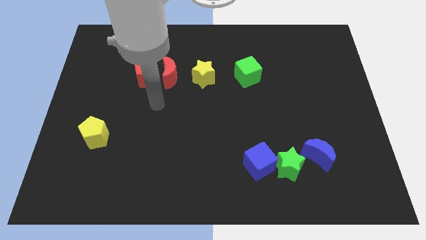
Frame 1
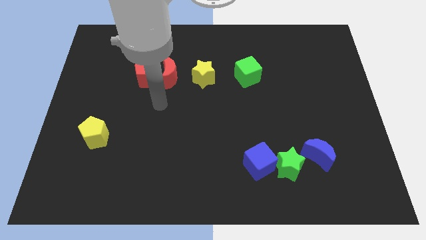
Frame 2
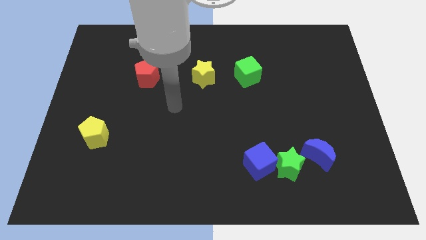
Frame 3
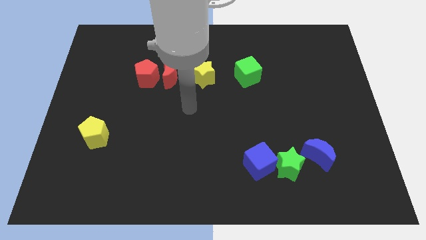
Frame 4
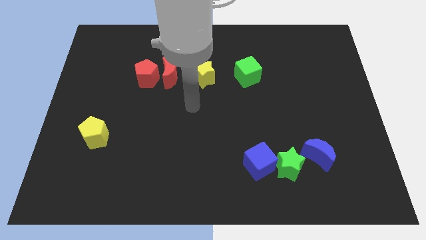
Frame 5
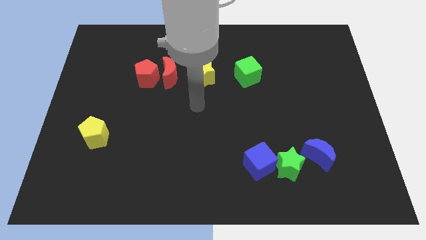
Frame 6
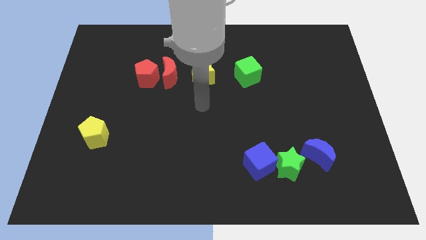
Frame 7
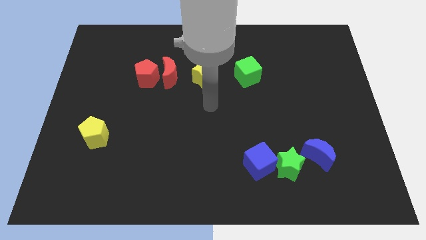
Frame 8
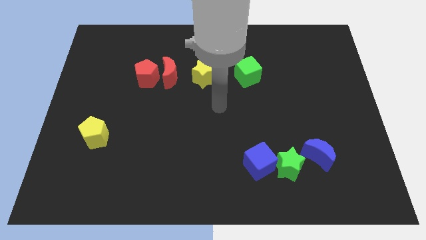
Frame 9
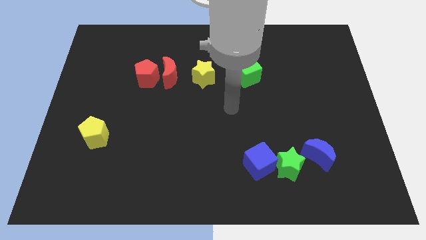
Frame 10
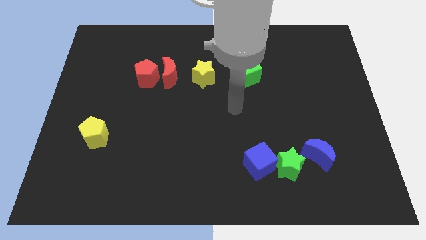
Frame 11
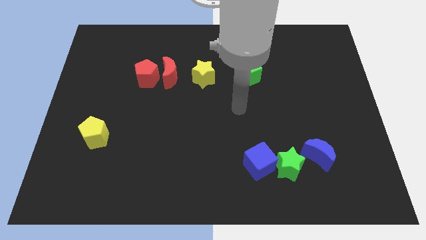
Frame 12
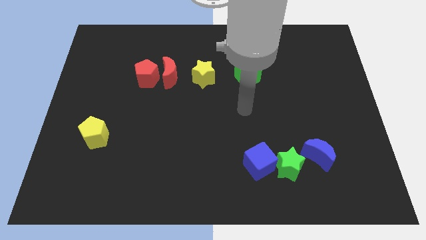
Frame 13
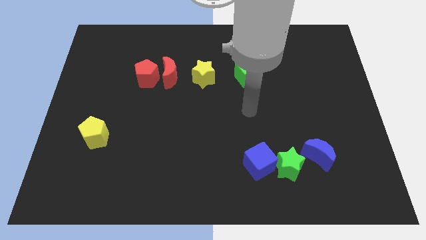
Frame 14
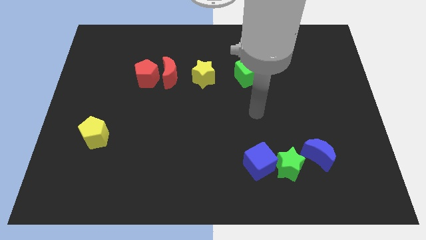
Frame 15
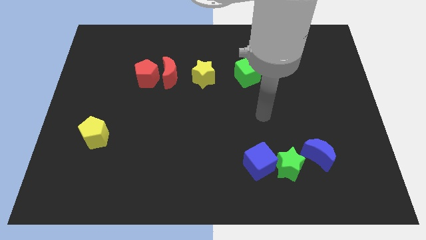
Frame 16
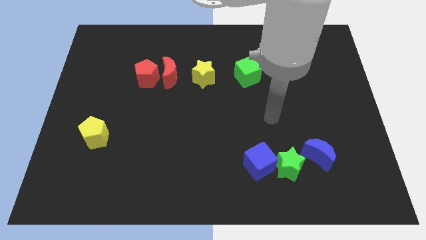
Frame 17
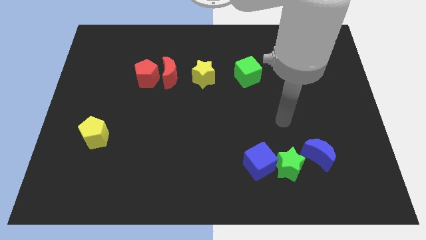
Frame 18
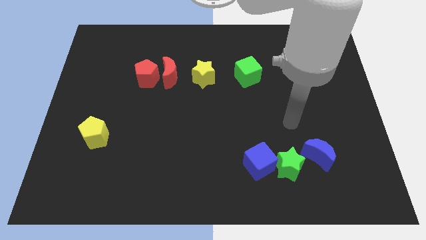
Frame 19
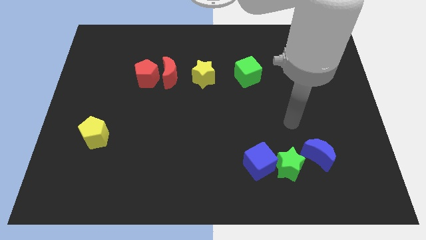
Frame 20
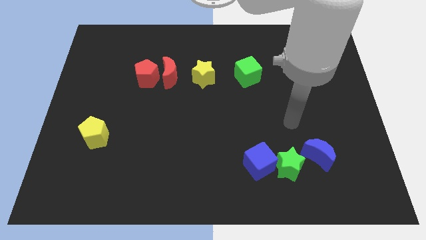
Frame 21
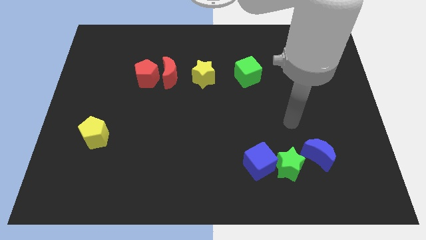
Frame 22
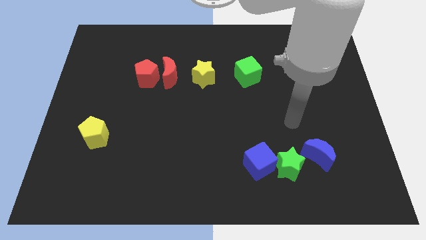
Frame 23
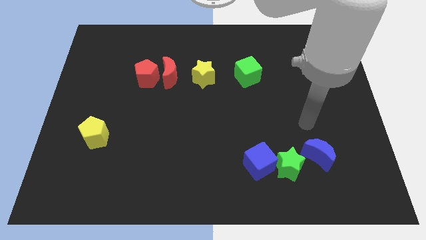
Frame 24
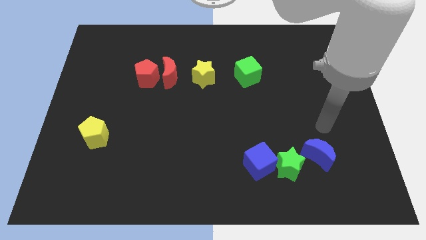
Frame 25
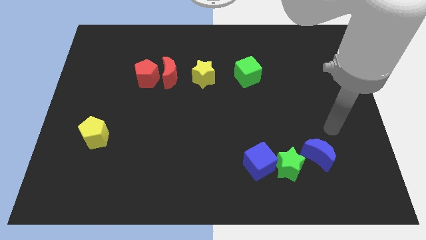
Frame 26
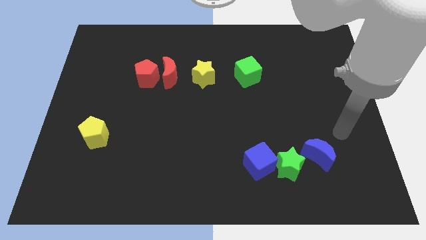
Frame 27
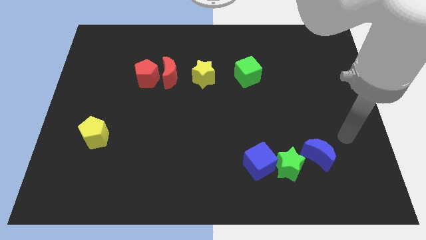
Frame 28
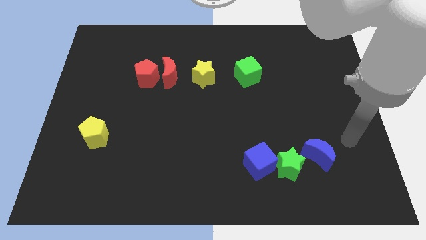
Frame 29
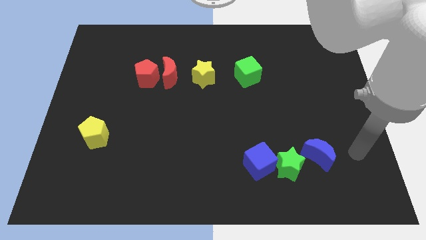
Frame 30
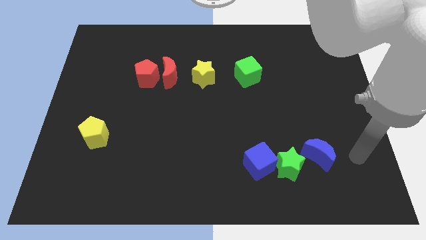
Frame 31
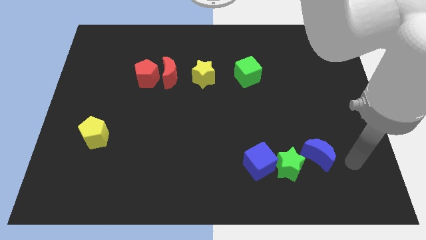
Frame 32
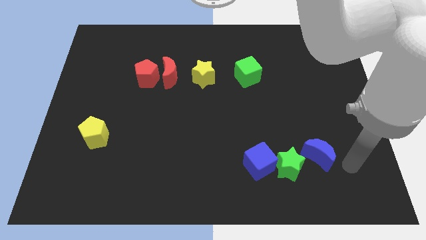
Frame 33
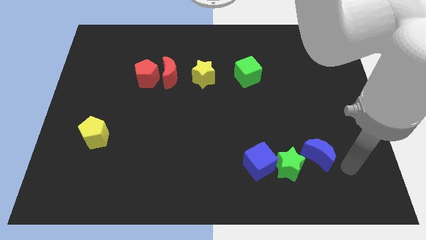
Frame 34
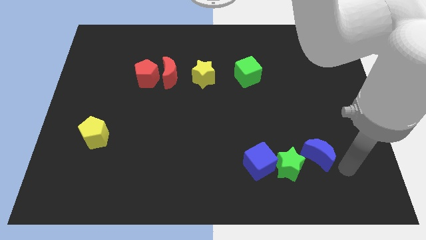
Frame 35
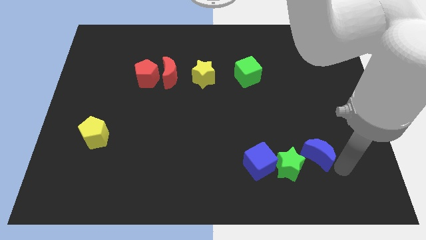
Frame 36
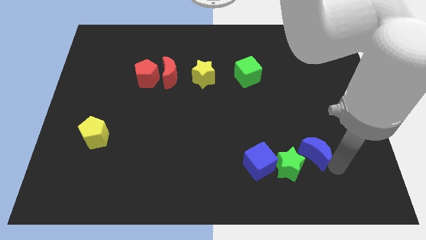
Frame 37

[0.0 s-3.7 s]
point your arm at the bottom right side of the blue moon

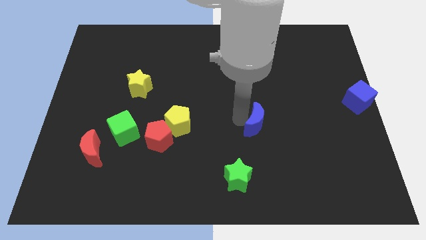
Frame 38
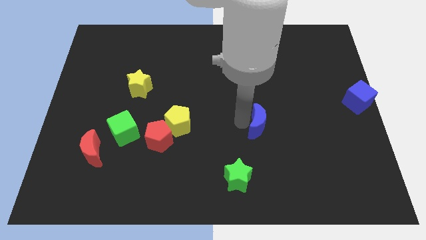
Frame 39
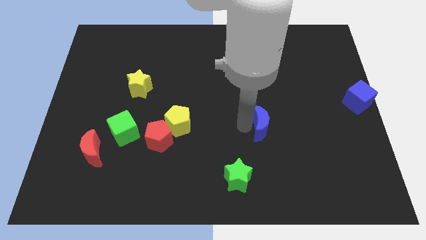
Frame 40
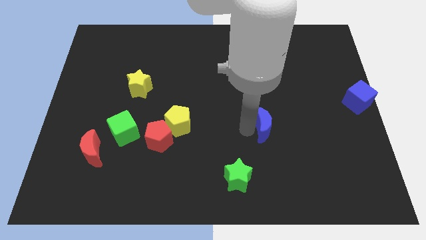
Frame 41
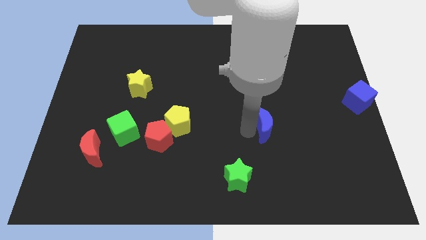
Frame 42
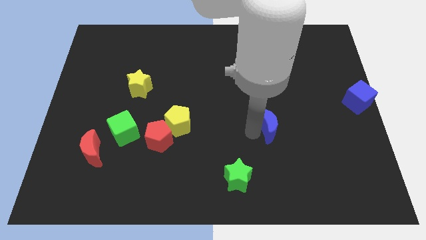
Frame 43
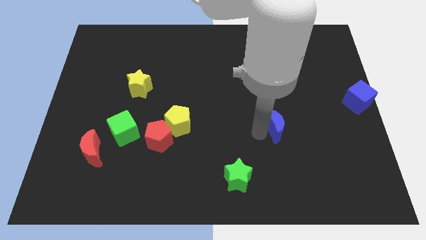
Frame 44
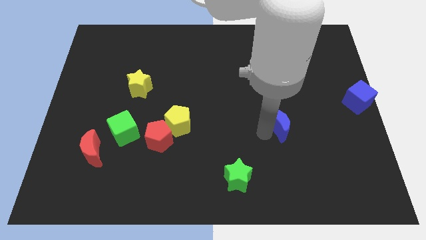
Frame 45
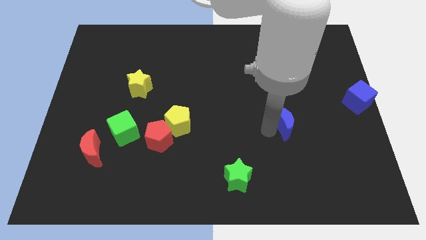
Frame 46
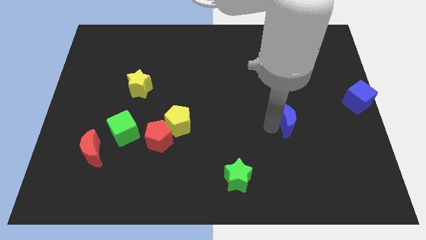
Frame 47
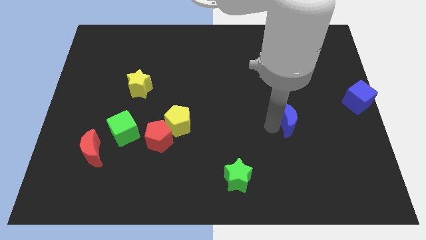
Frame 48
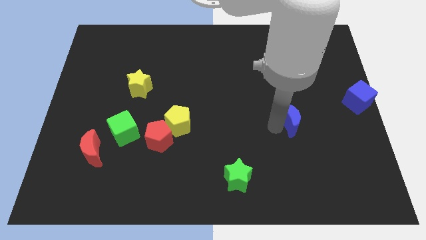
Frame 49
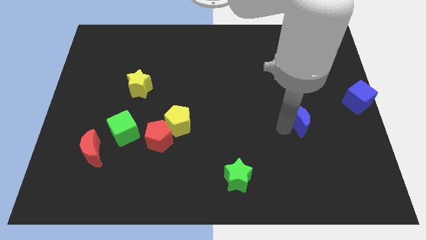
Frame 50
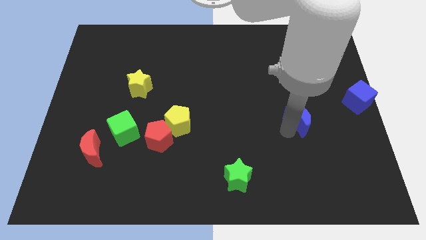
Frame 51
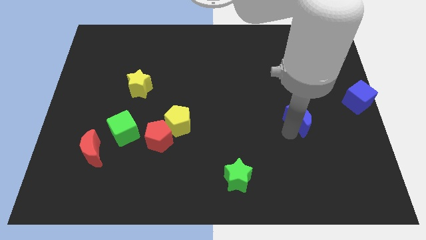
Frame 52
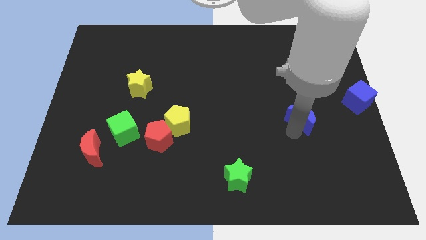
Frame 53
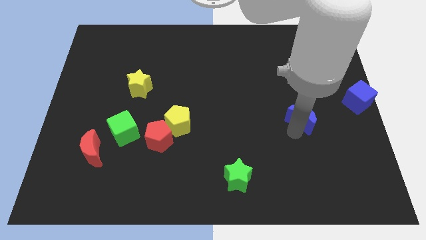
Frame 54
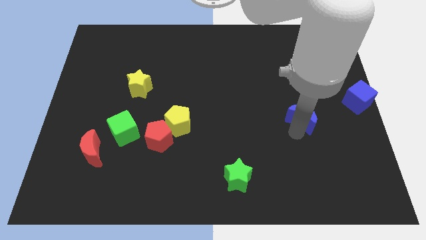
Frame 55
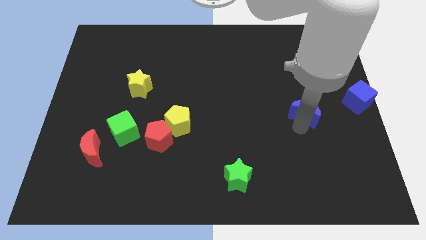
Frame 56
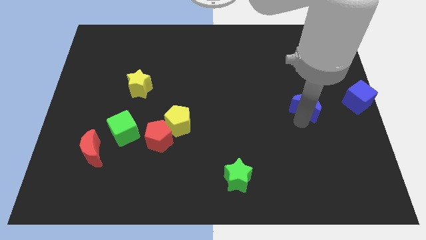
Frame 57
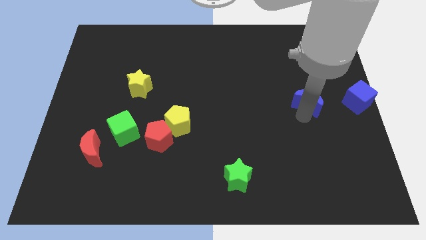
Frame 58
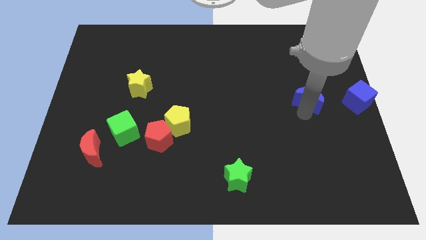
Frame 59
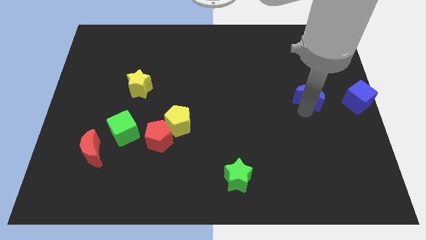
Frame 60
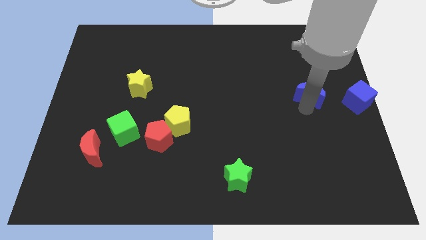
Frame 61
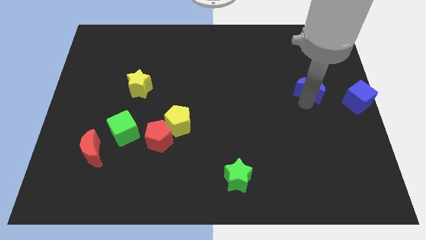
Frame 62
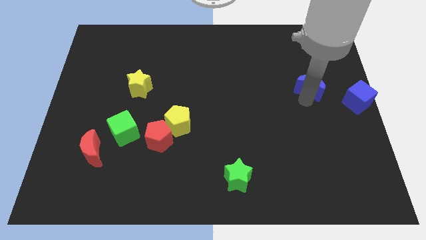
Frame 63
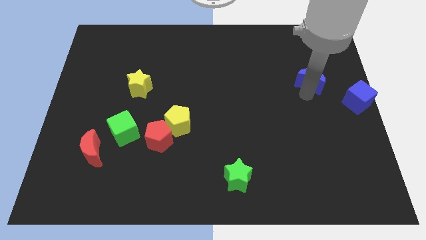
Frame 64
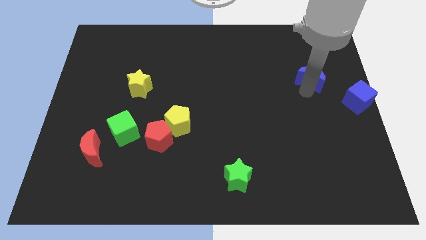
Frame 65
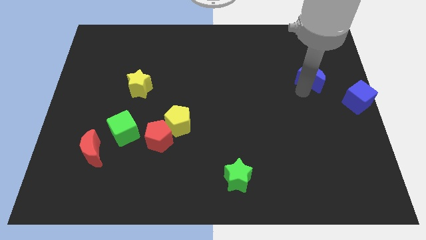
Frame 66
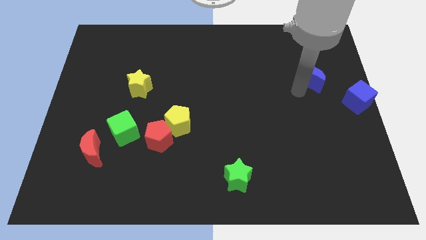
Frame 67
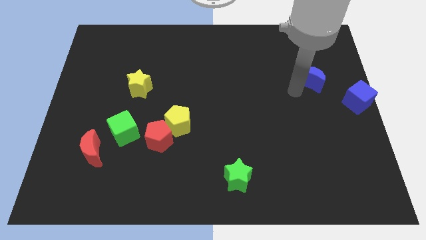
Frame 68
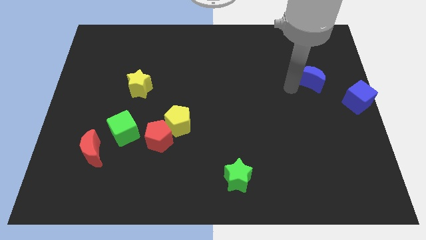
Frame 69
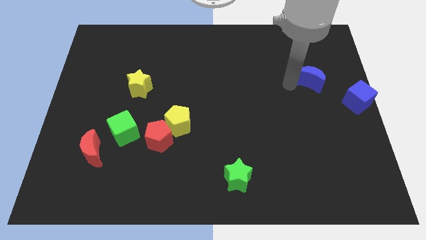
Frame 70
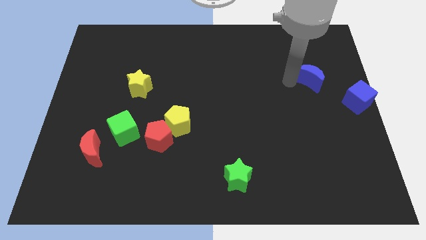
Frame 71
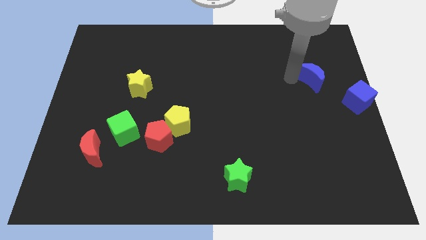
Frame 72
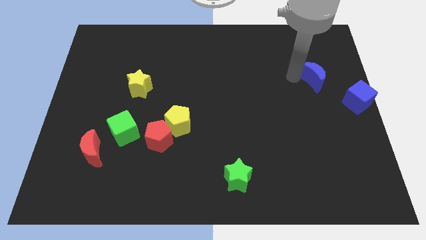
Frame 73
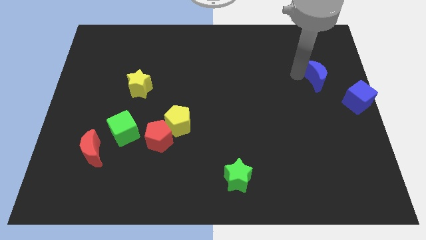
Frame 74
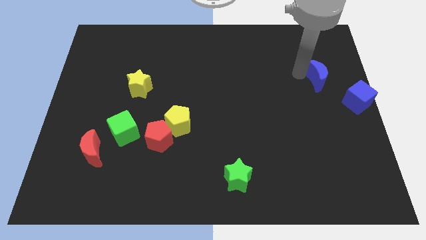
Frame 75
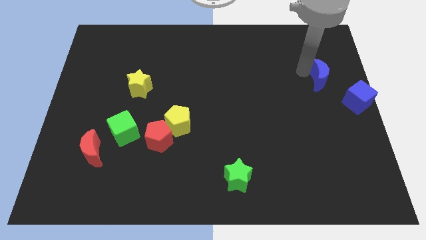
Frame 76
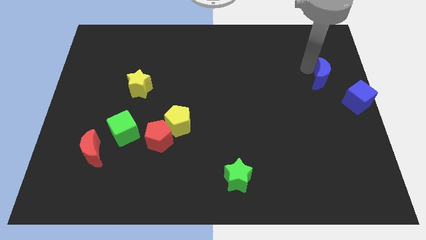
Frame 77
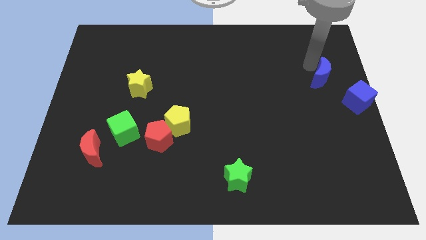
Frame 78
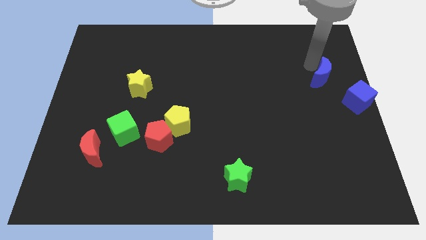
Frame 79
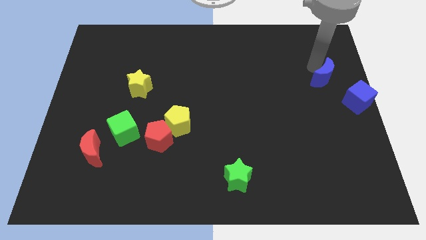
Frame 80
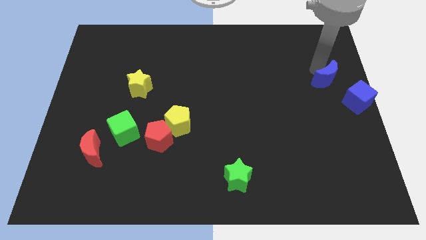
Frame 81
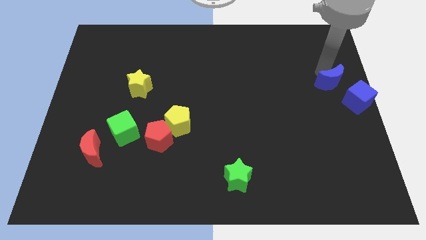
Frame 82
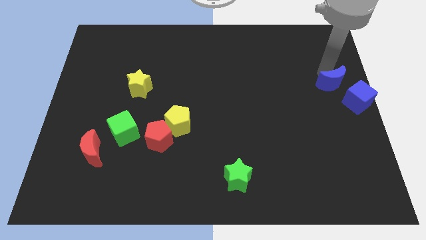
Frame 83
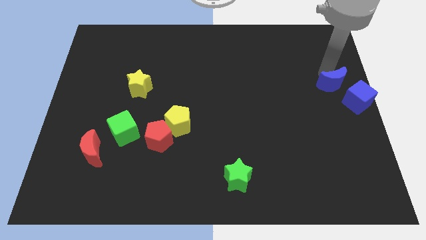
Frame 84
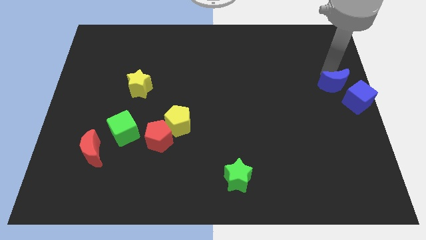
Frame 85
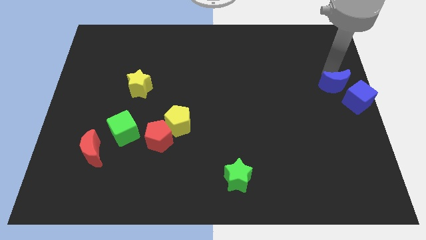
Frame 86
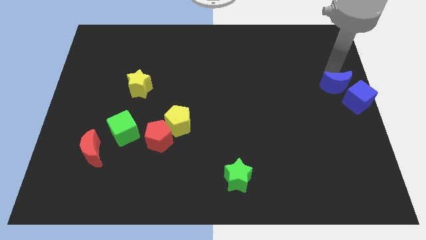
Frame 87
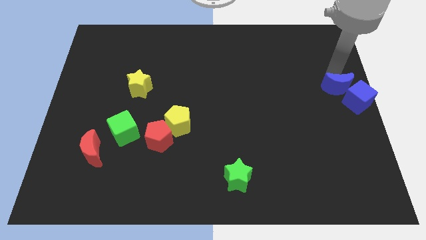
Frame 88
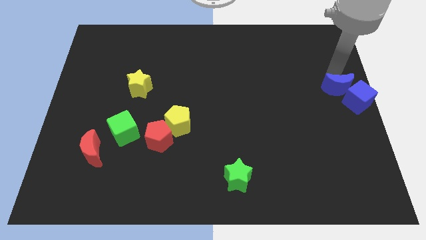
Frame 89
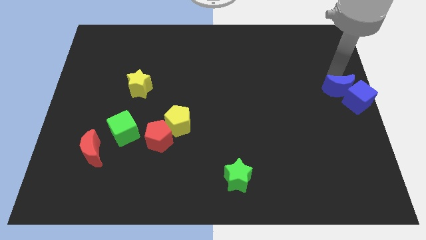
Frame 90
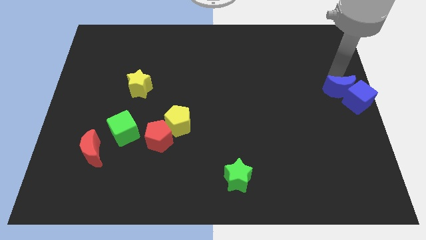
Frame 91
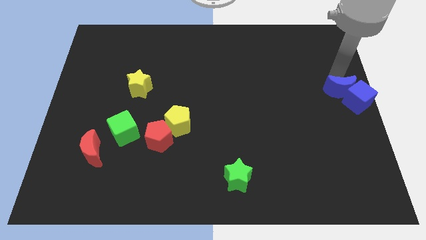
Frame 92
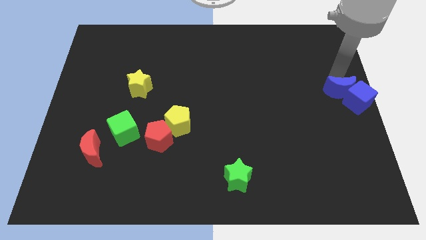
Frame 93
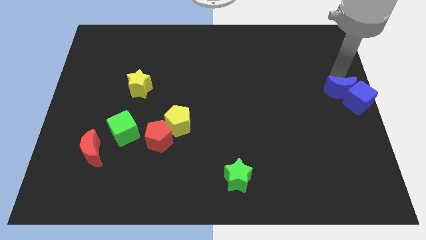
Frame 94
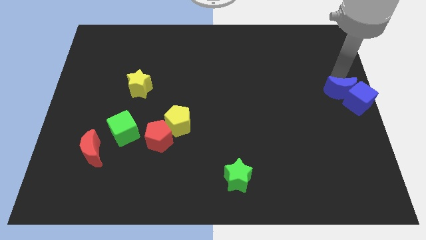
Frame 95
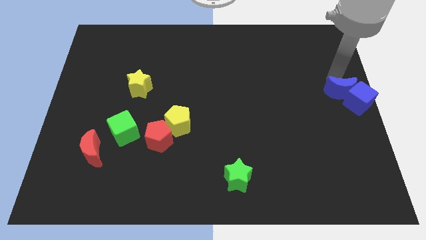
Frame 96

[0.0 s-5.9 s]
push the blue crescent towards the top of the blue cube
